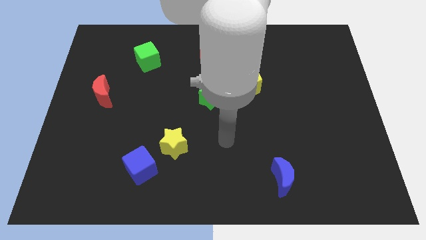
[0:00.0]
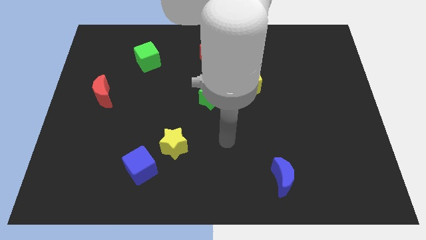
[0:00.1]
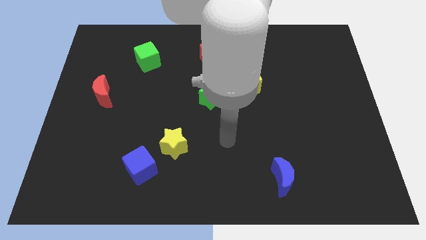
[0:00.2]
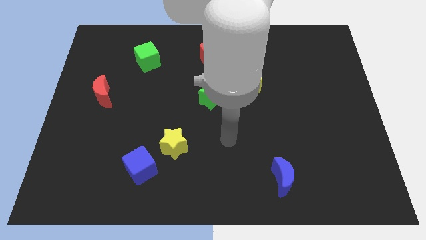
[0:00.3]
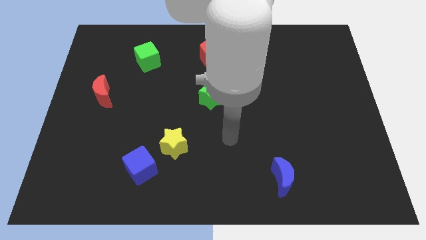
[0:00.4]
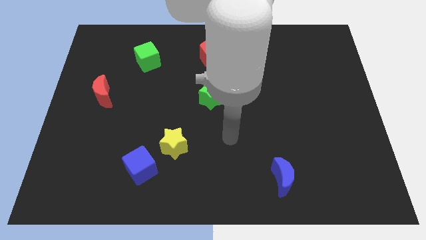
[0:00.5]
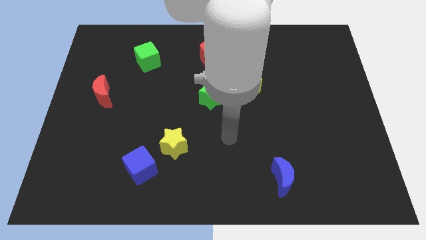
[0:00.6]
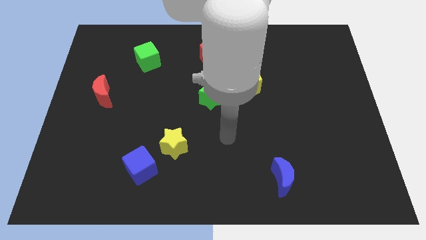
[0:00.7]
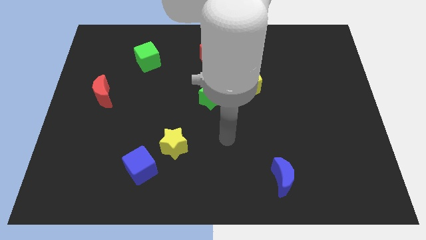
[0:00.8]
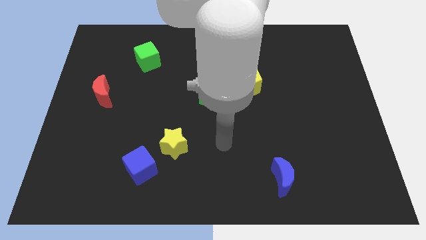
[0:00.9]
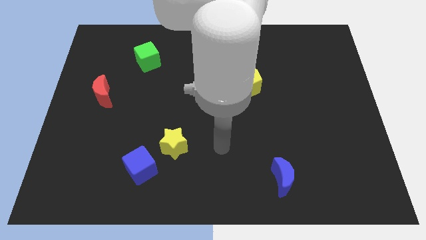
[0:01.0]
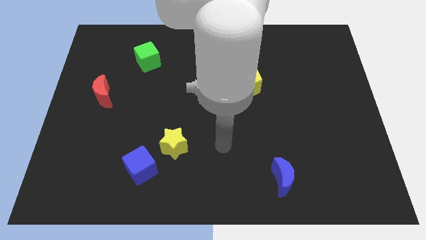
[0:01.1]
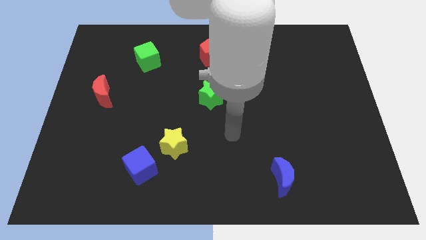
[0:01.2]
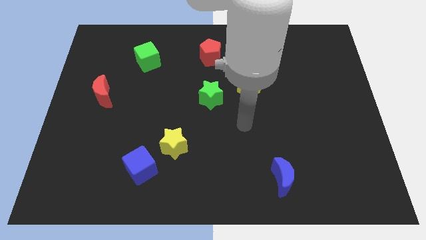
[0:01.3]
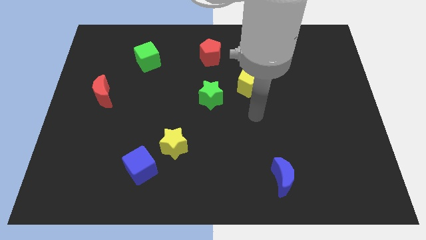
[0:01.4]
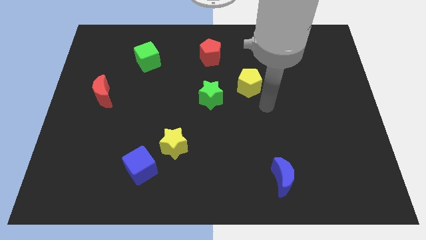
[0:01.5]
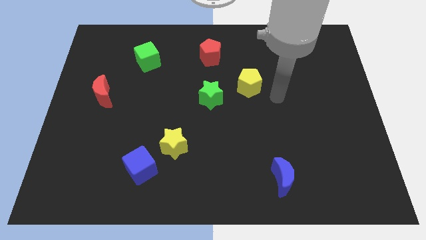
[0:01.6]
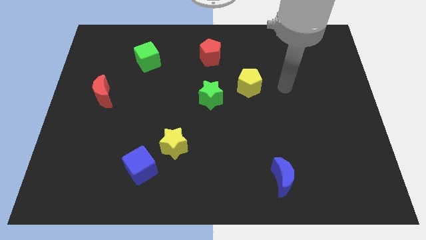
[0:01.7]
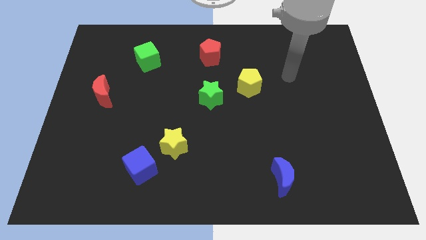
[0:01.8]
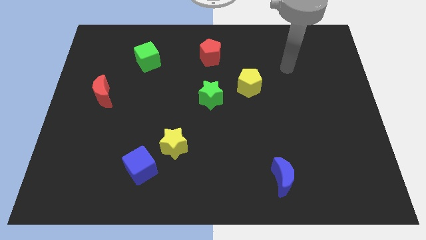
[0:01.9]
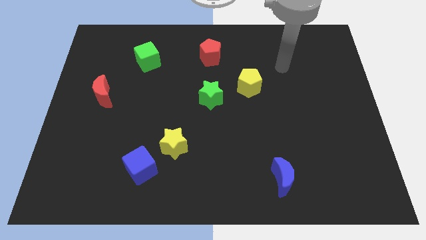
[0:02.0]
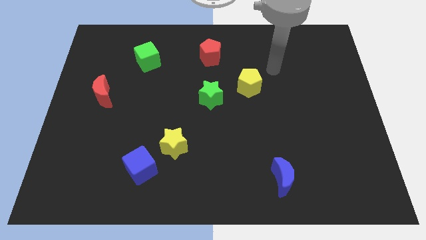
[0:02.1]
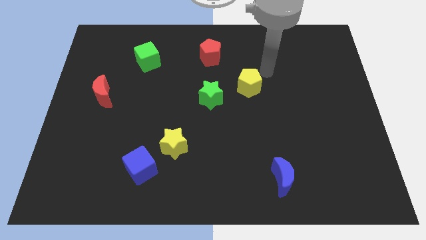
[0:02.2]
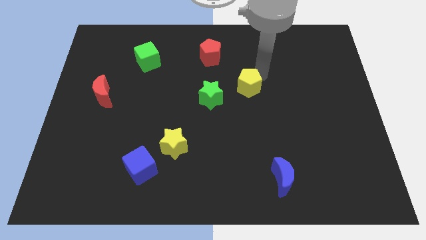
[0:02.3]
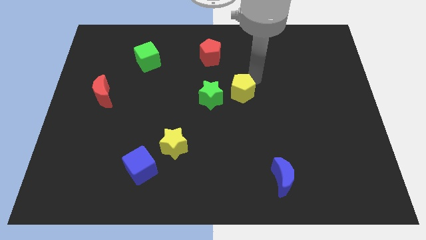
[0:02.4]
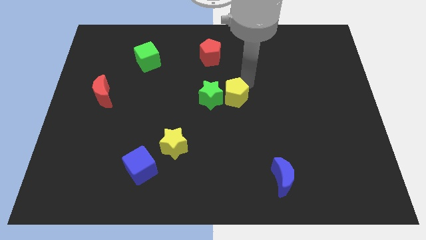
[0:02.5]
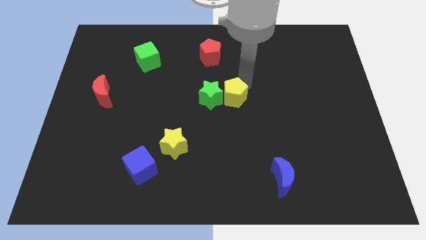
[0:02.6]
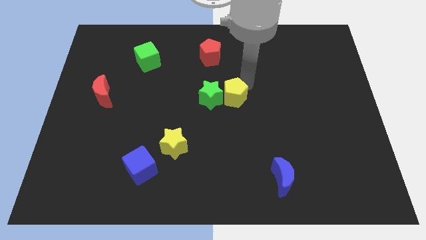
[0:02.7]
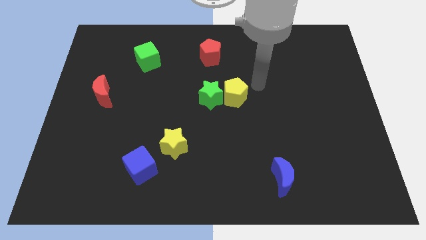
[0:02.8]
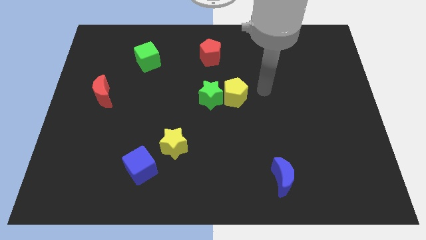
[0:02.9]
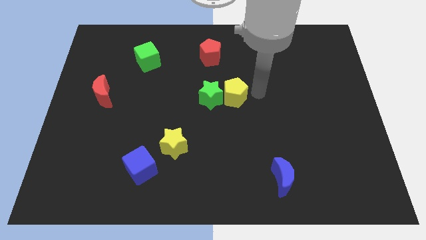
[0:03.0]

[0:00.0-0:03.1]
move the yellow pentagon close to the right of the green star

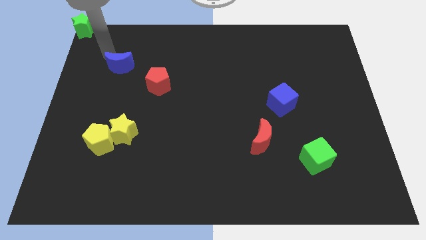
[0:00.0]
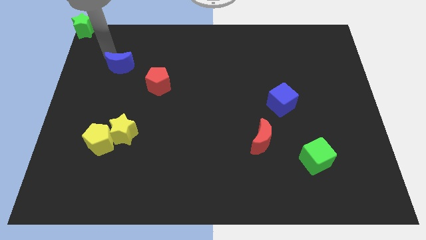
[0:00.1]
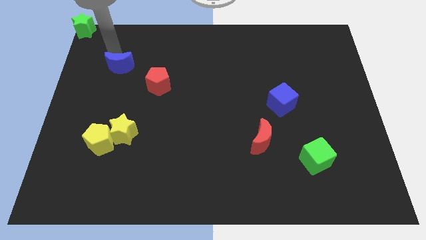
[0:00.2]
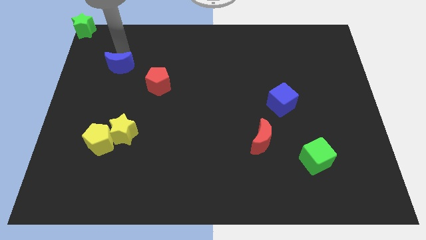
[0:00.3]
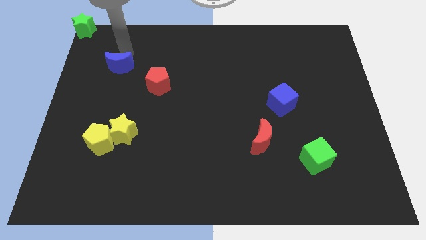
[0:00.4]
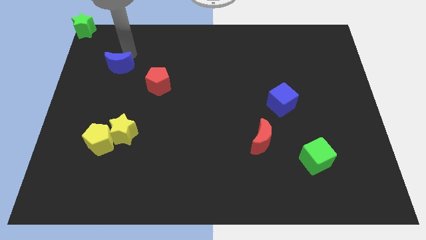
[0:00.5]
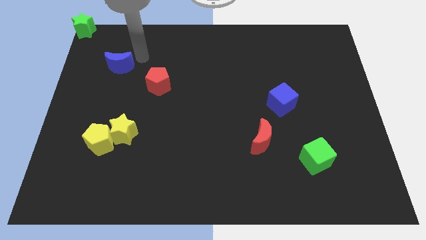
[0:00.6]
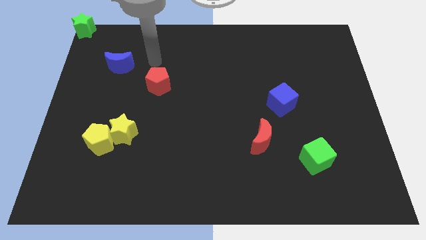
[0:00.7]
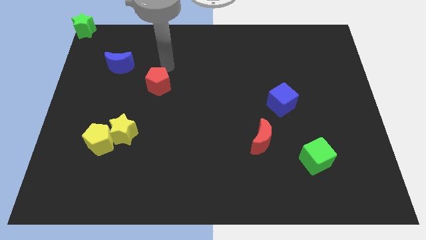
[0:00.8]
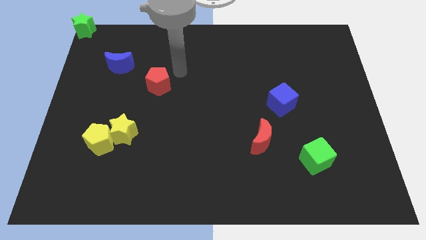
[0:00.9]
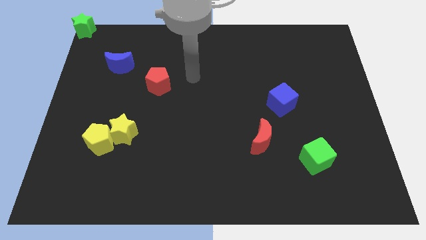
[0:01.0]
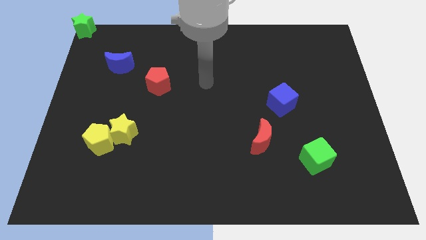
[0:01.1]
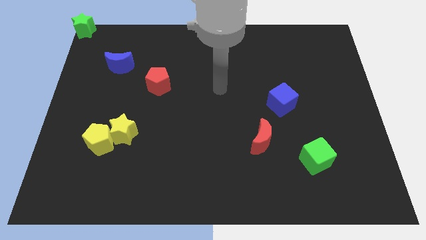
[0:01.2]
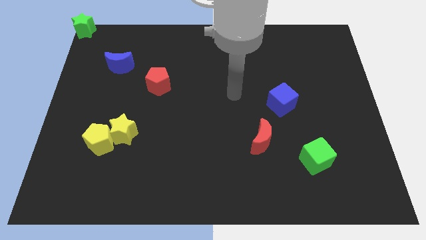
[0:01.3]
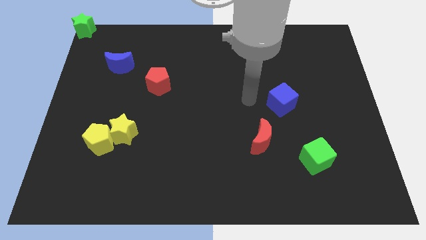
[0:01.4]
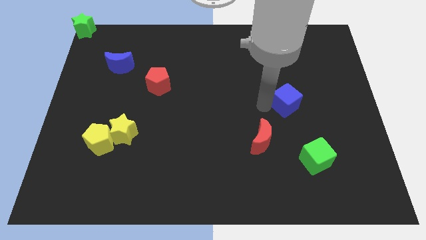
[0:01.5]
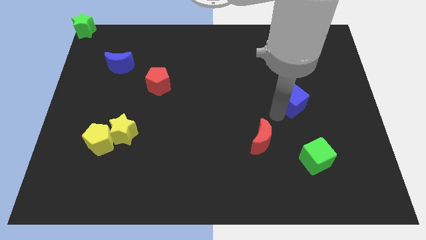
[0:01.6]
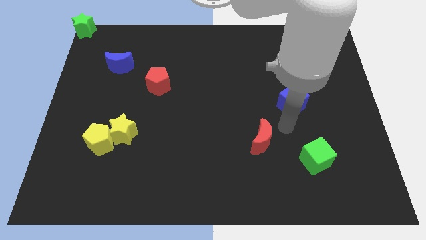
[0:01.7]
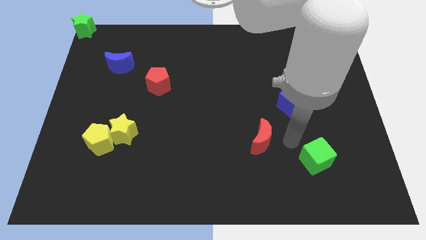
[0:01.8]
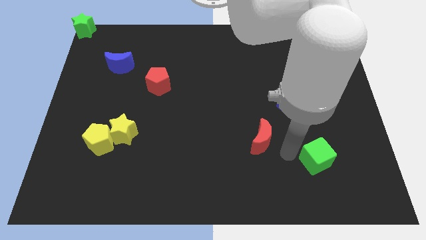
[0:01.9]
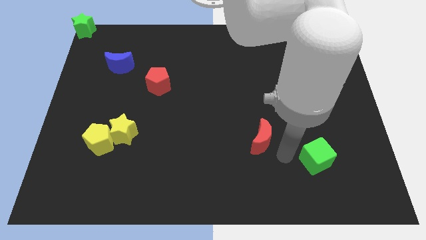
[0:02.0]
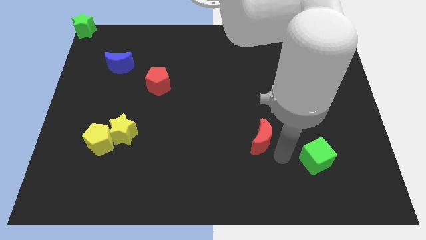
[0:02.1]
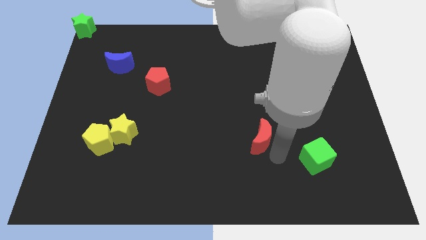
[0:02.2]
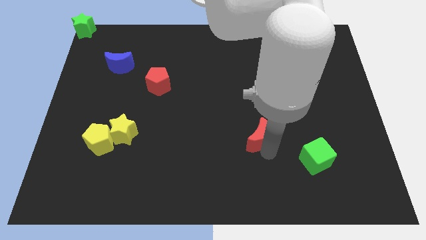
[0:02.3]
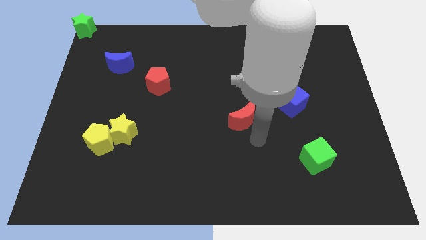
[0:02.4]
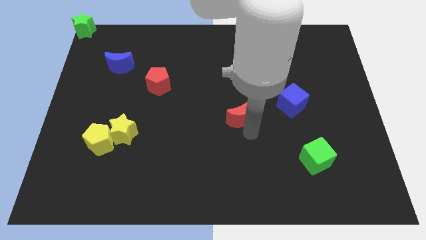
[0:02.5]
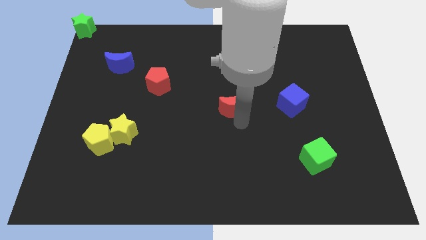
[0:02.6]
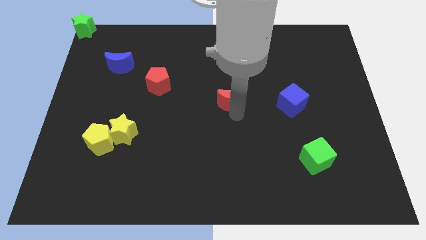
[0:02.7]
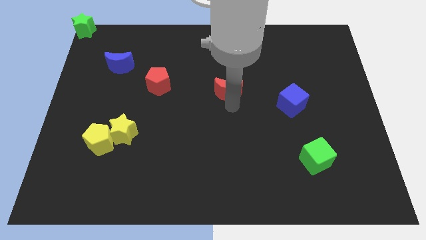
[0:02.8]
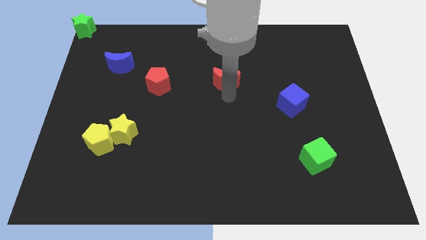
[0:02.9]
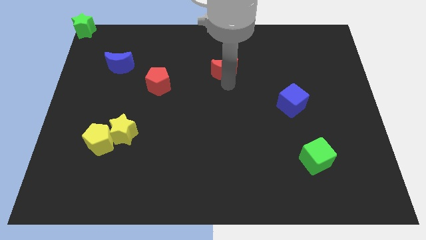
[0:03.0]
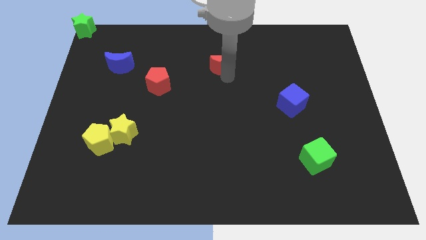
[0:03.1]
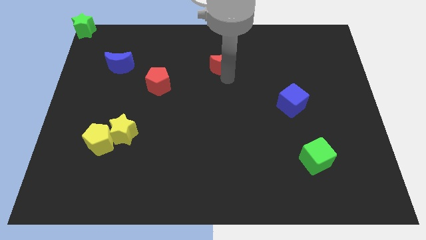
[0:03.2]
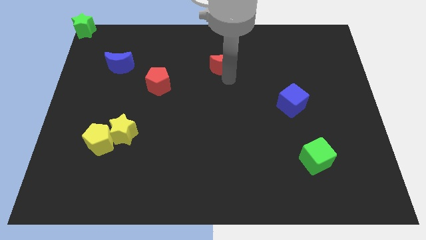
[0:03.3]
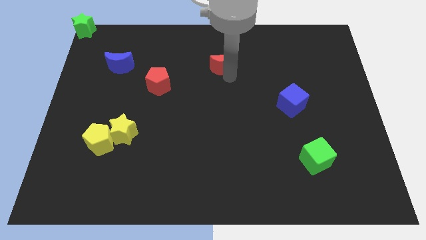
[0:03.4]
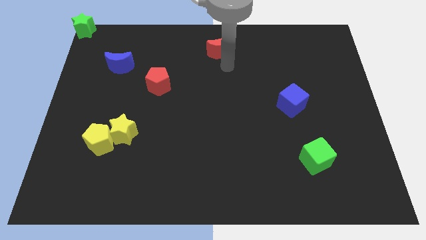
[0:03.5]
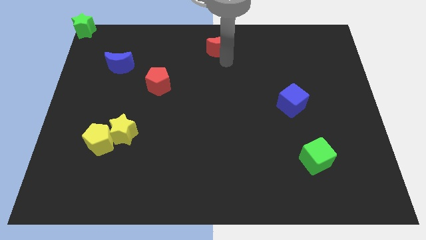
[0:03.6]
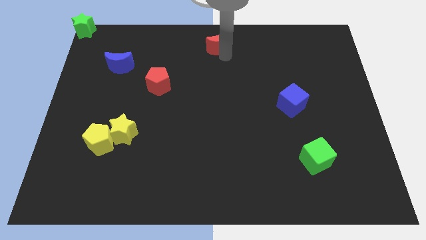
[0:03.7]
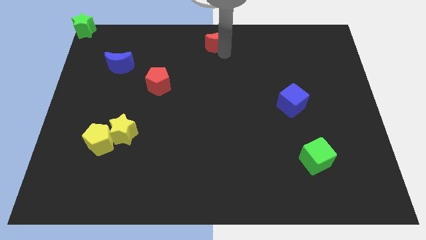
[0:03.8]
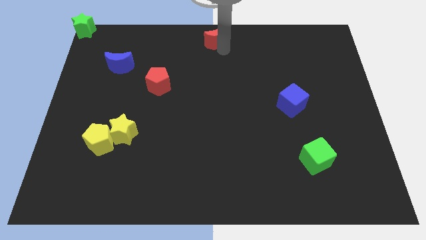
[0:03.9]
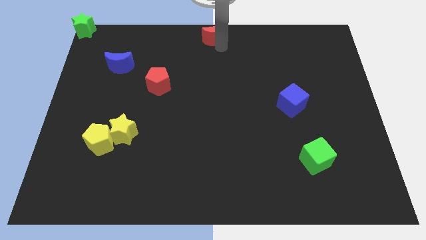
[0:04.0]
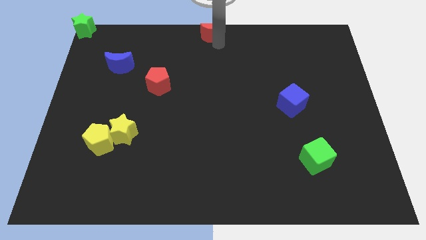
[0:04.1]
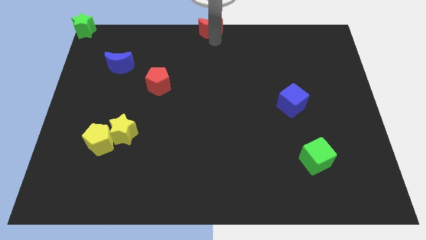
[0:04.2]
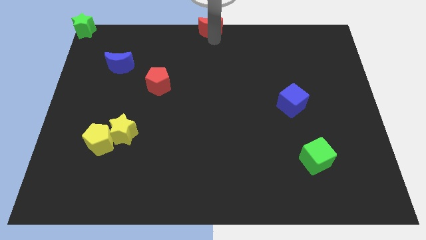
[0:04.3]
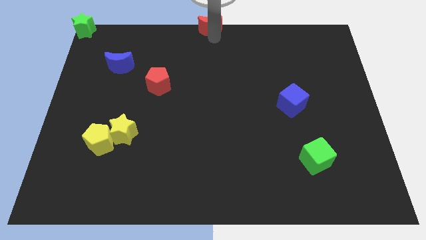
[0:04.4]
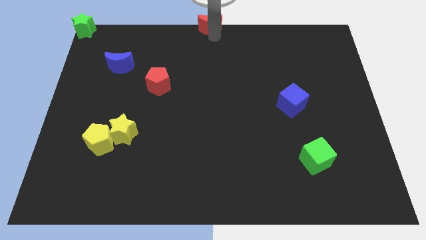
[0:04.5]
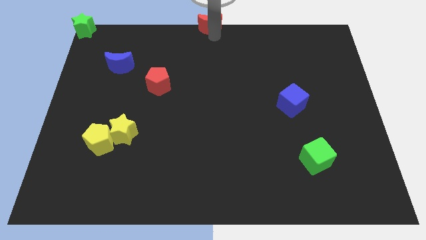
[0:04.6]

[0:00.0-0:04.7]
move red crescent to the top centre of the board

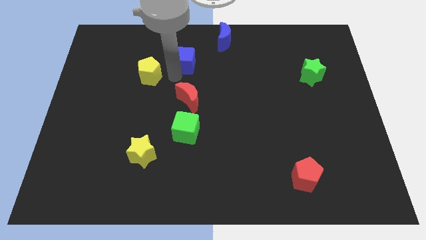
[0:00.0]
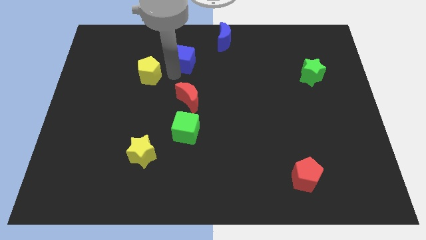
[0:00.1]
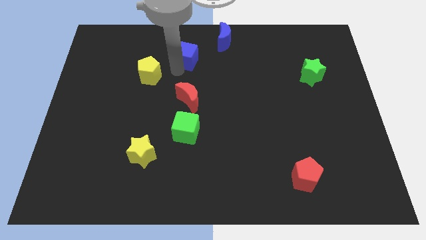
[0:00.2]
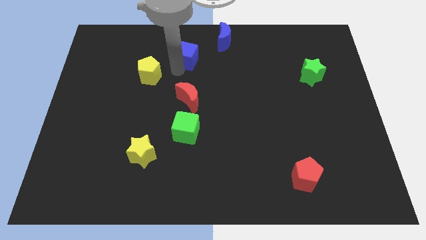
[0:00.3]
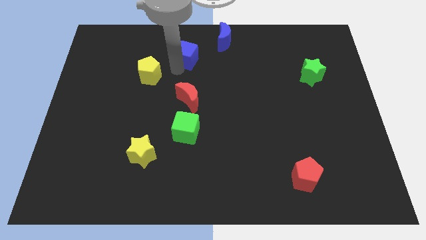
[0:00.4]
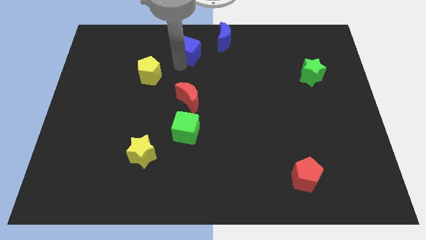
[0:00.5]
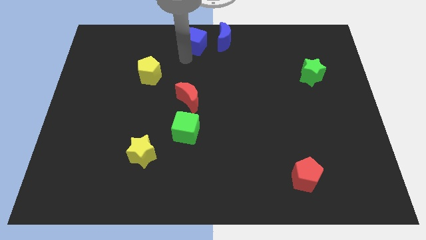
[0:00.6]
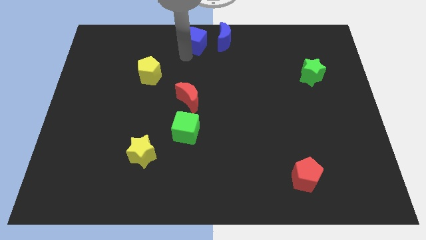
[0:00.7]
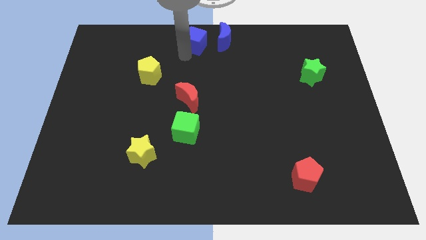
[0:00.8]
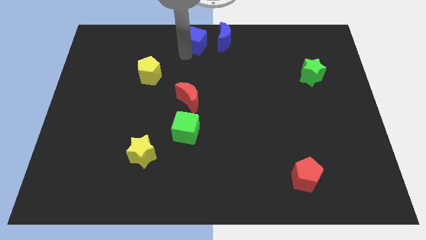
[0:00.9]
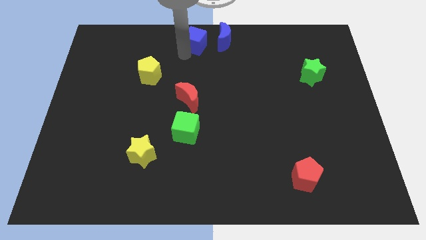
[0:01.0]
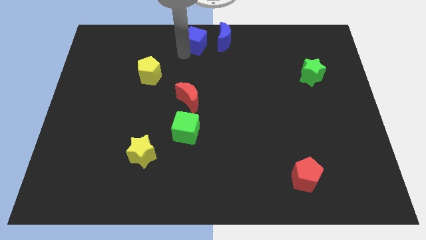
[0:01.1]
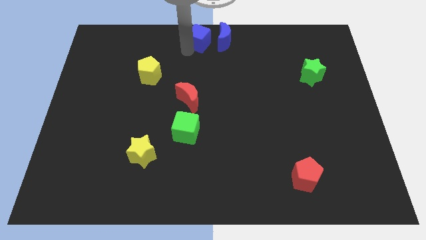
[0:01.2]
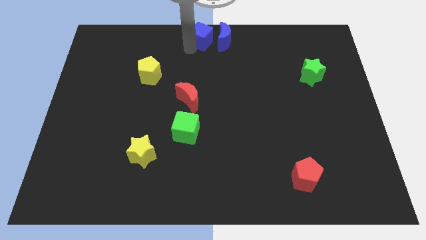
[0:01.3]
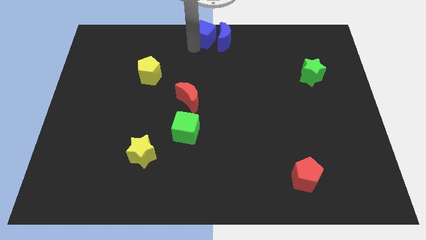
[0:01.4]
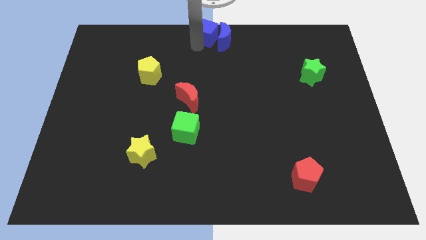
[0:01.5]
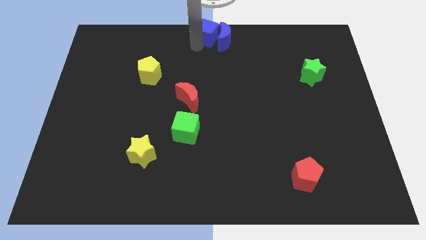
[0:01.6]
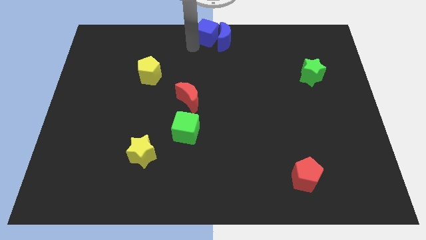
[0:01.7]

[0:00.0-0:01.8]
move the blue cube to the left into blue moon
